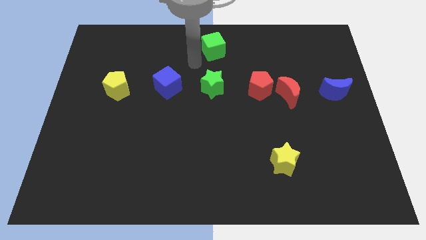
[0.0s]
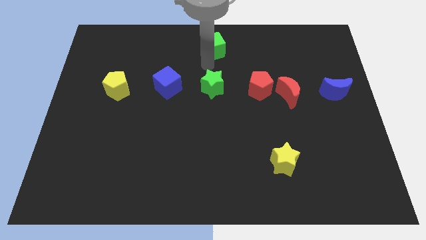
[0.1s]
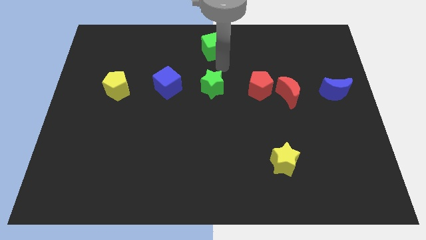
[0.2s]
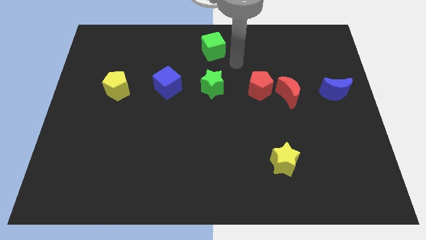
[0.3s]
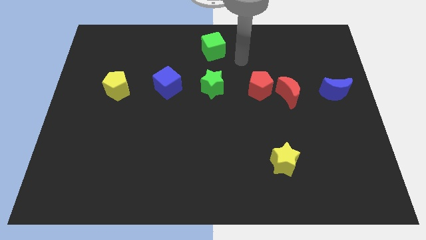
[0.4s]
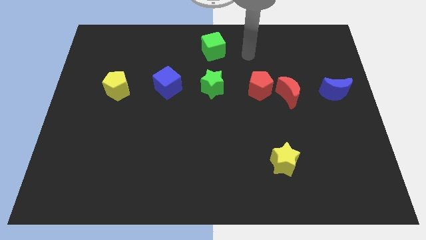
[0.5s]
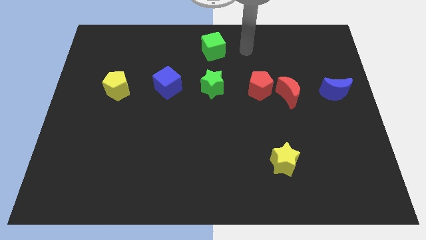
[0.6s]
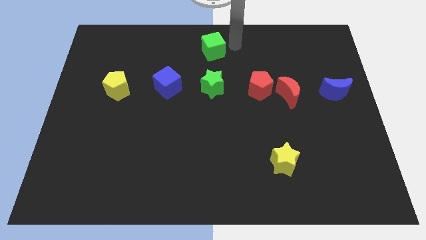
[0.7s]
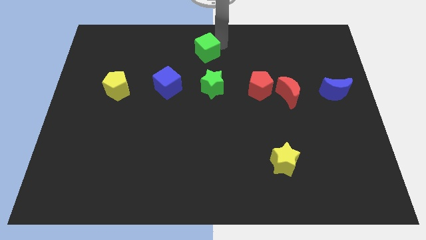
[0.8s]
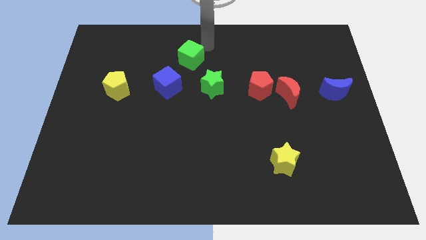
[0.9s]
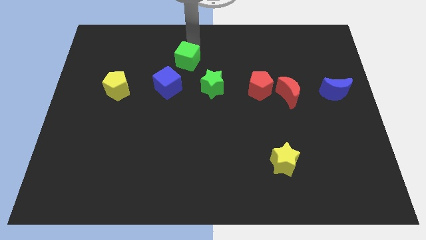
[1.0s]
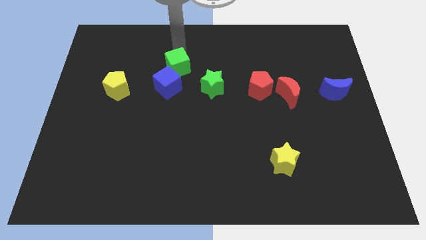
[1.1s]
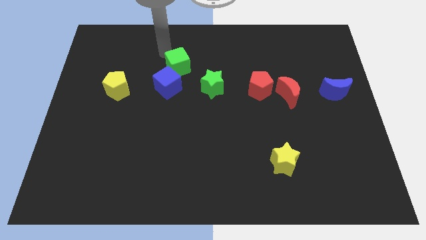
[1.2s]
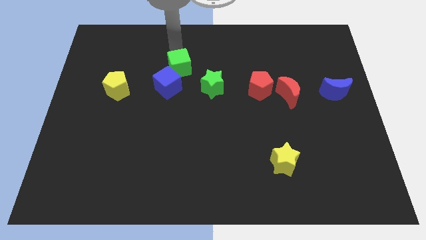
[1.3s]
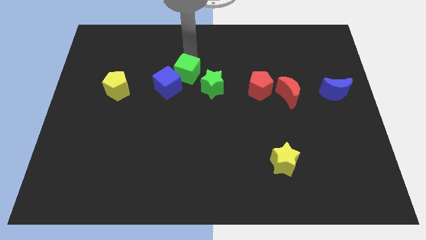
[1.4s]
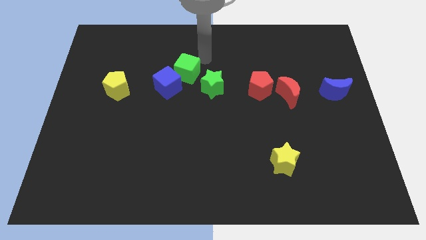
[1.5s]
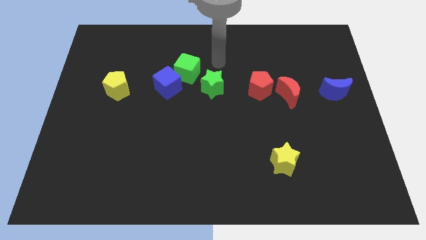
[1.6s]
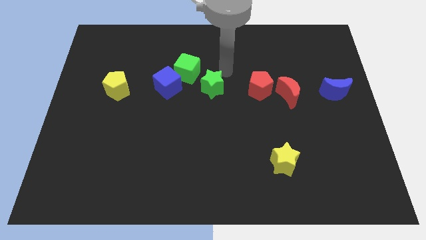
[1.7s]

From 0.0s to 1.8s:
place the green cube diagonal above the blue cube

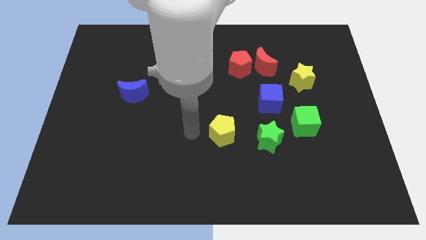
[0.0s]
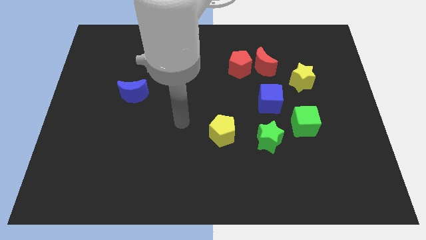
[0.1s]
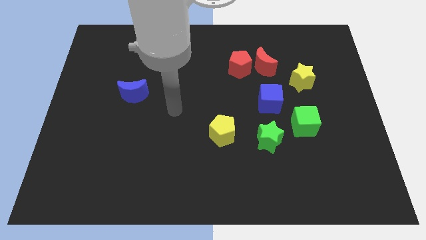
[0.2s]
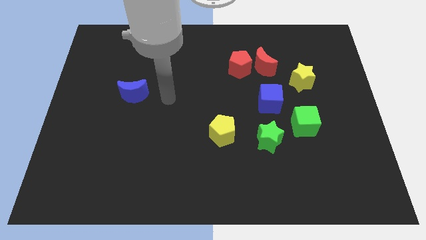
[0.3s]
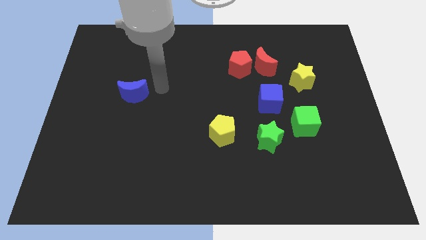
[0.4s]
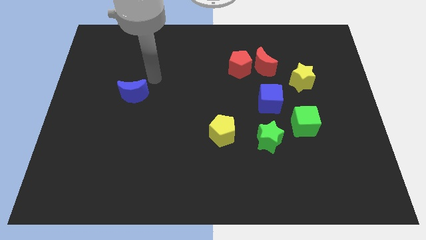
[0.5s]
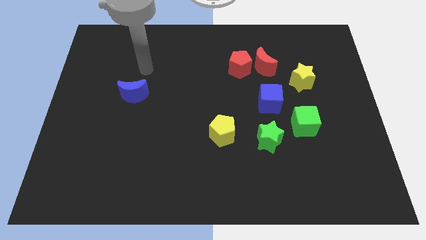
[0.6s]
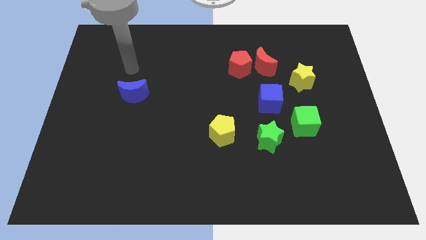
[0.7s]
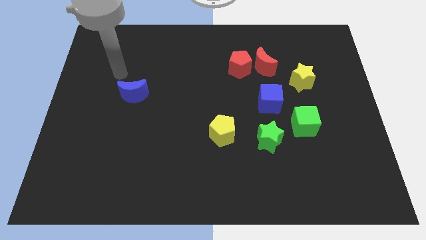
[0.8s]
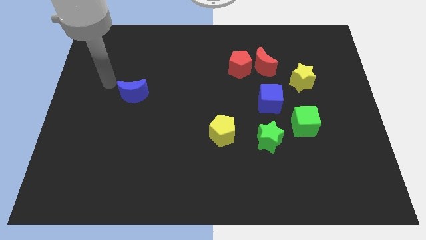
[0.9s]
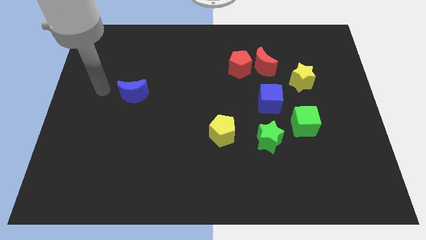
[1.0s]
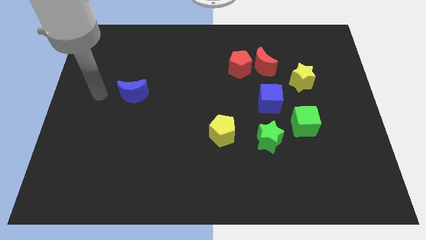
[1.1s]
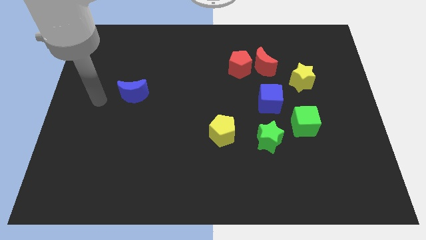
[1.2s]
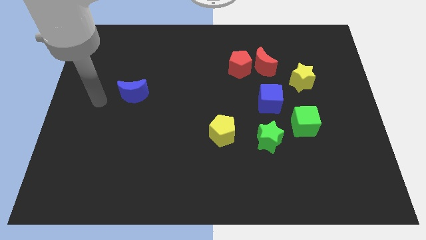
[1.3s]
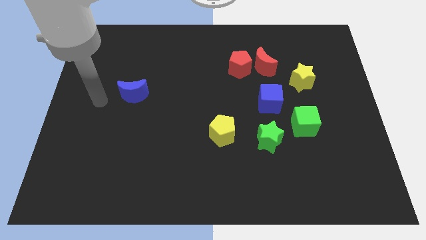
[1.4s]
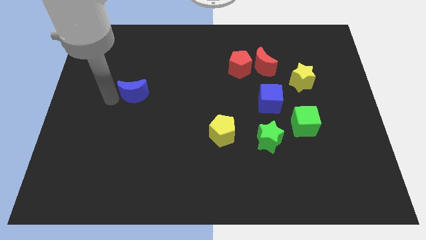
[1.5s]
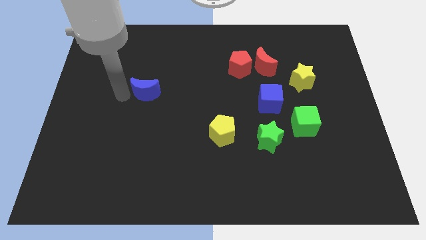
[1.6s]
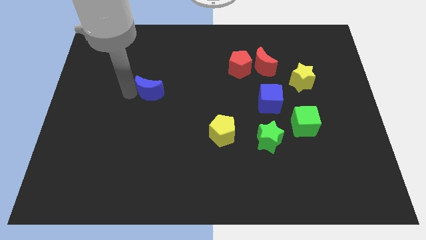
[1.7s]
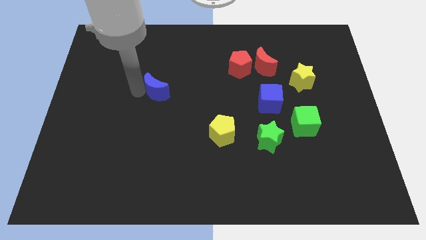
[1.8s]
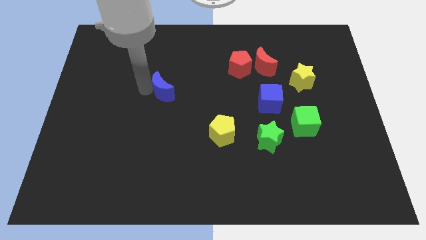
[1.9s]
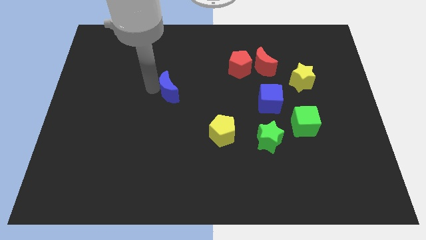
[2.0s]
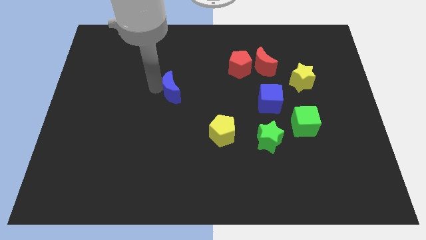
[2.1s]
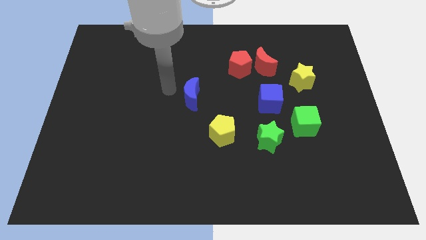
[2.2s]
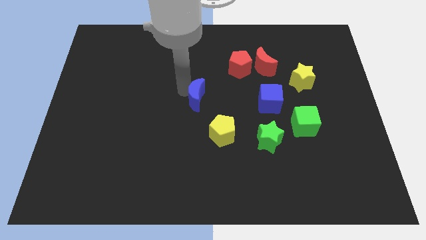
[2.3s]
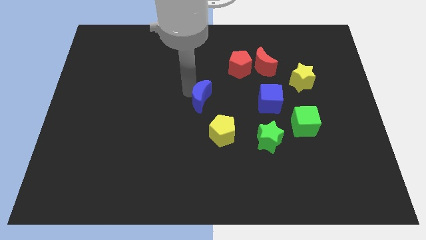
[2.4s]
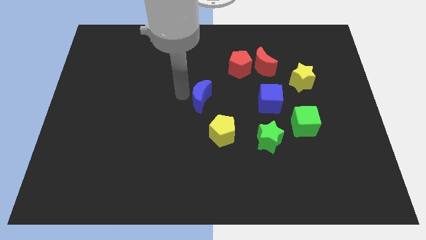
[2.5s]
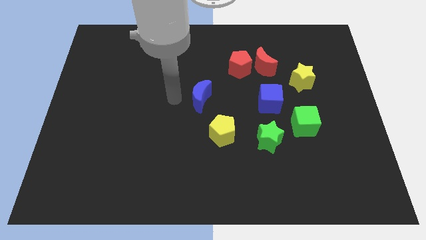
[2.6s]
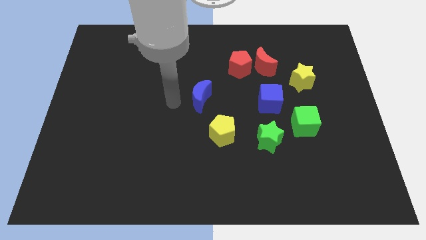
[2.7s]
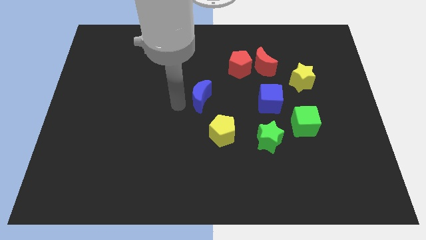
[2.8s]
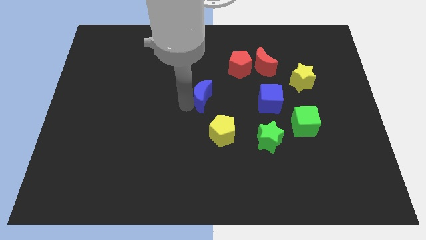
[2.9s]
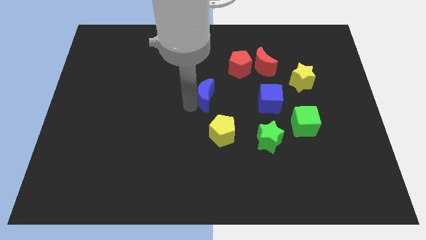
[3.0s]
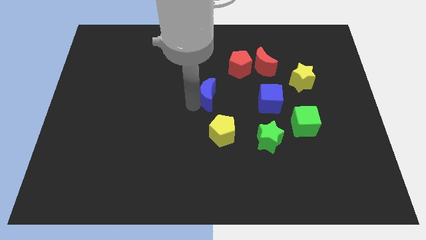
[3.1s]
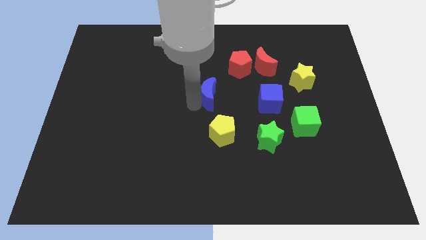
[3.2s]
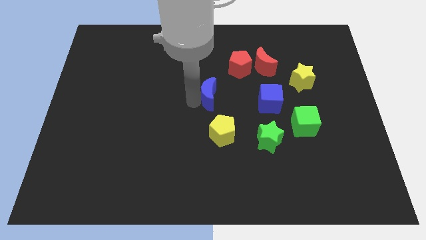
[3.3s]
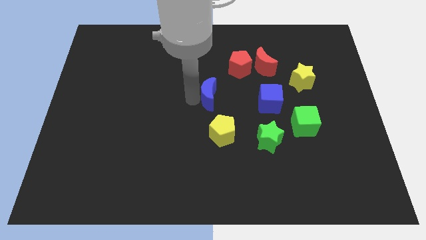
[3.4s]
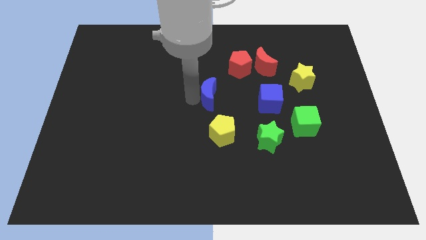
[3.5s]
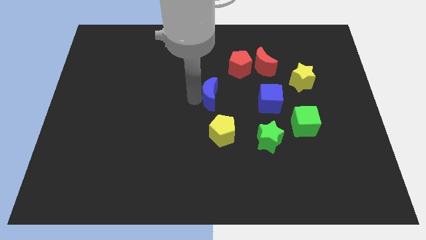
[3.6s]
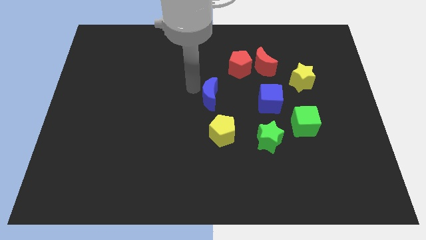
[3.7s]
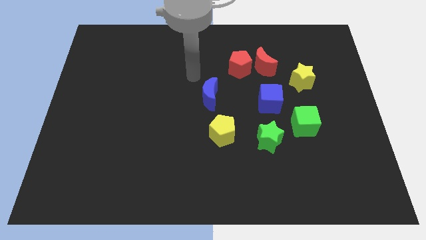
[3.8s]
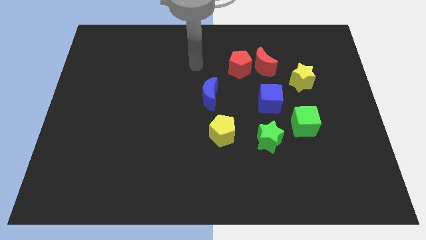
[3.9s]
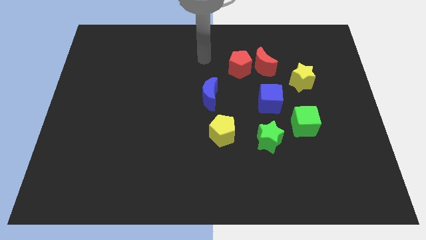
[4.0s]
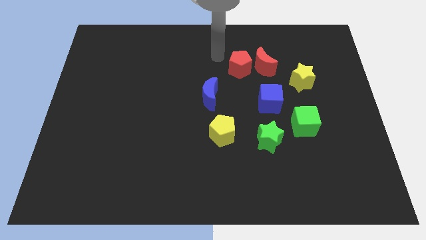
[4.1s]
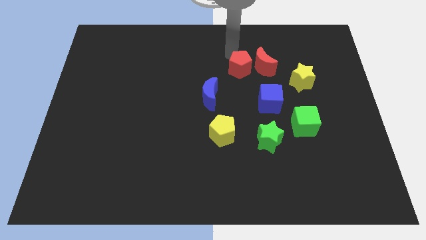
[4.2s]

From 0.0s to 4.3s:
slide the blue moon towards the center of the board

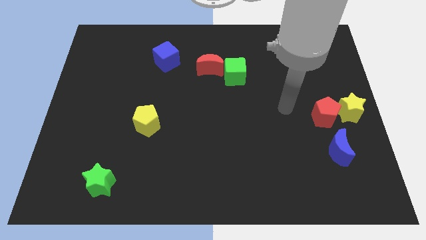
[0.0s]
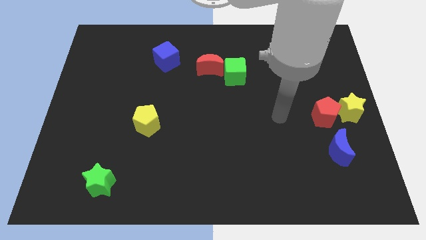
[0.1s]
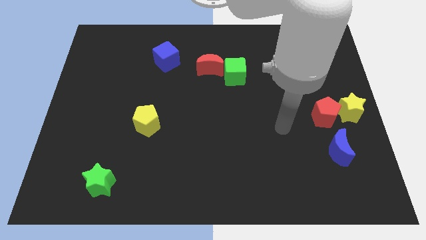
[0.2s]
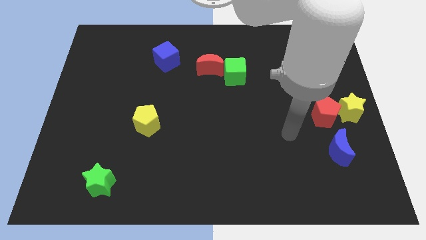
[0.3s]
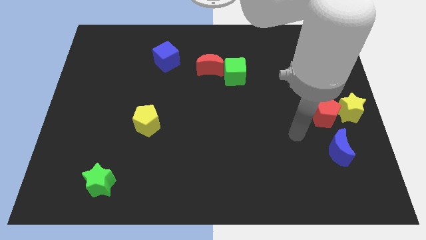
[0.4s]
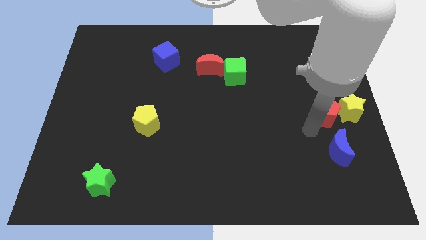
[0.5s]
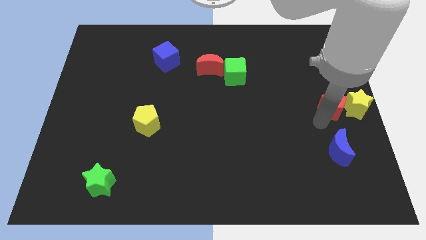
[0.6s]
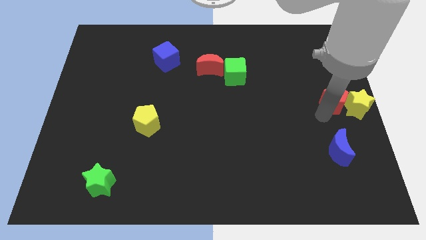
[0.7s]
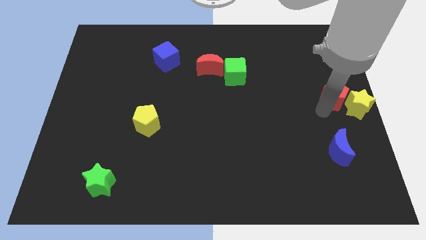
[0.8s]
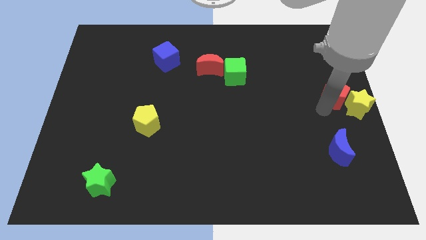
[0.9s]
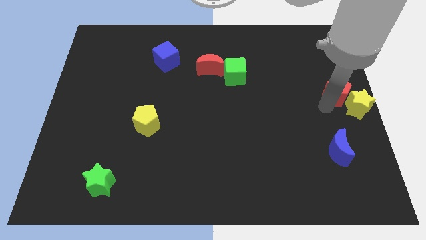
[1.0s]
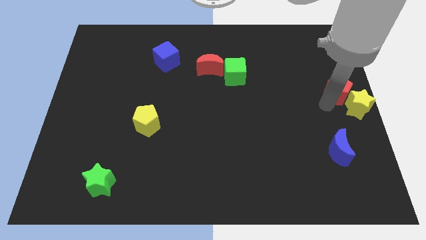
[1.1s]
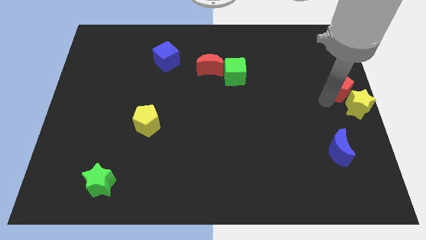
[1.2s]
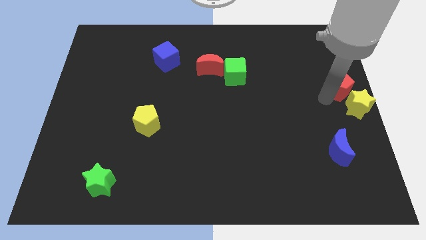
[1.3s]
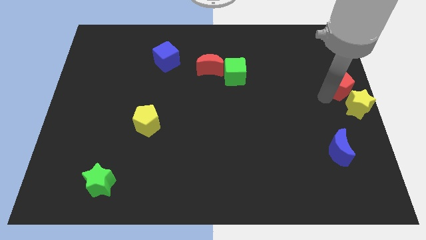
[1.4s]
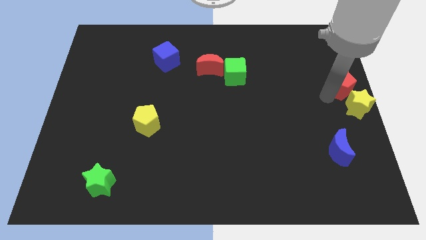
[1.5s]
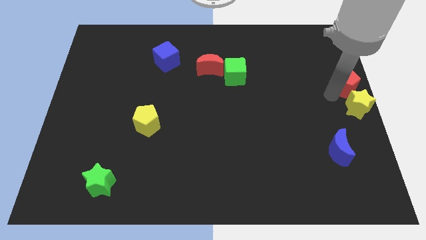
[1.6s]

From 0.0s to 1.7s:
move yellow star and red pentagon to the right middle of the board

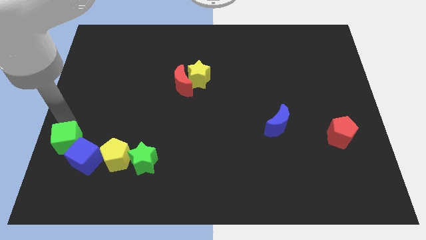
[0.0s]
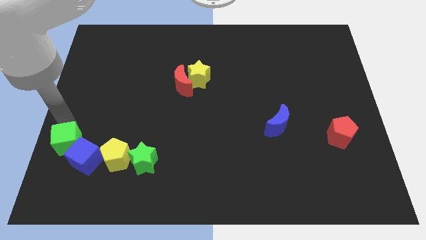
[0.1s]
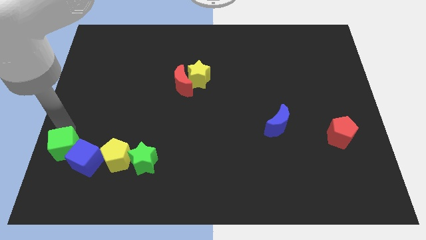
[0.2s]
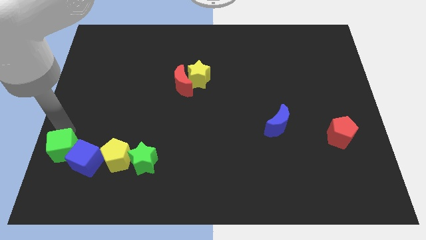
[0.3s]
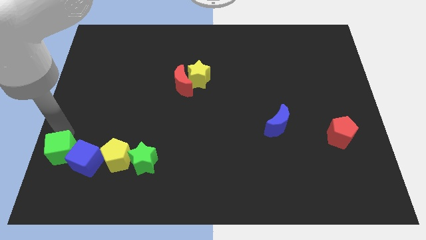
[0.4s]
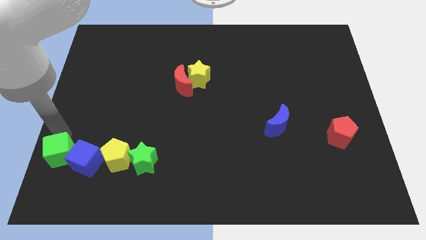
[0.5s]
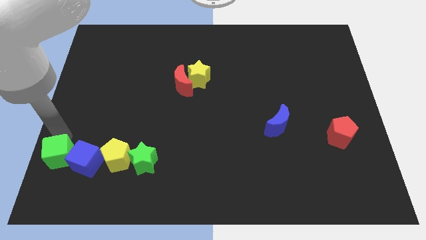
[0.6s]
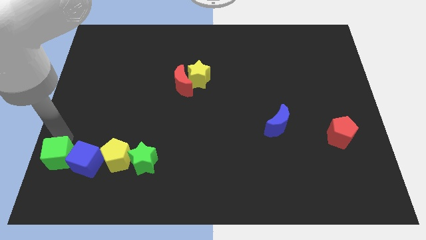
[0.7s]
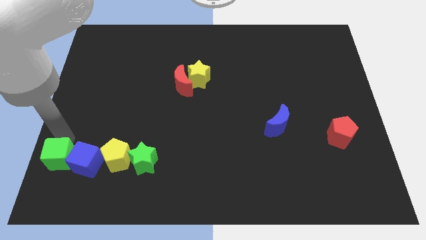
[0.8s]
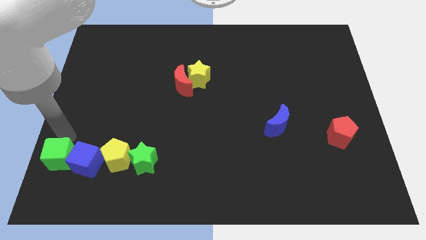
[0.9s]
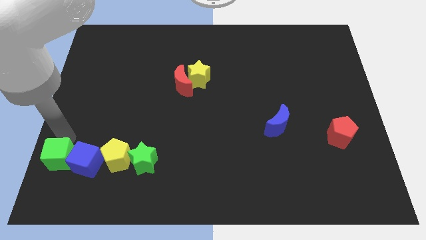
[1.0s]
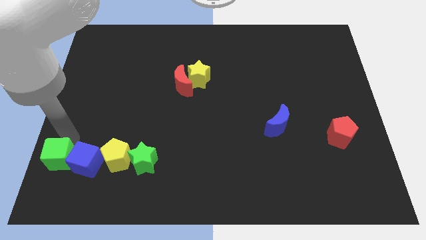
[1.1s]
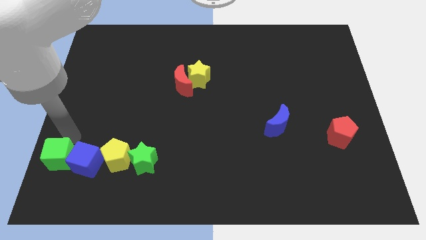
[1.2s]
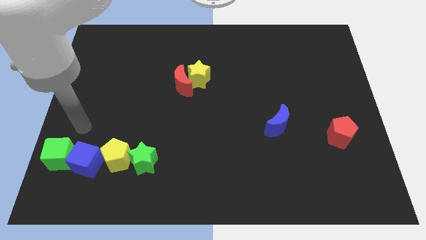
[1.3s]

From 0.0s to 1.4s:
place green cube to the left side of blue cube
